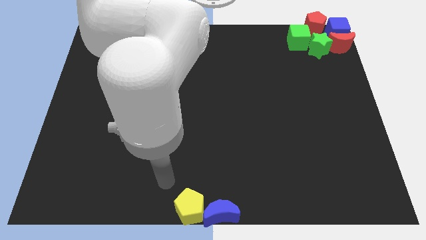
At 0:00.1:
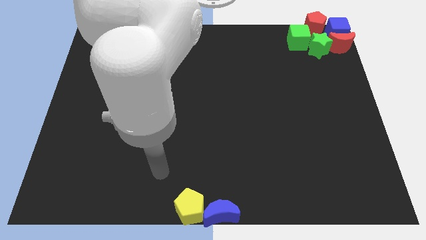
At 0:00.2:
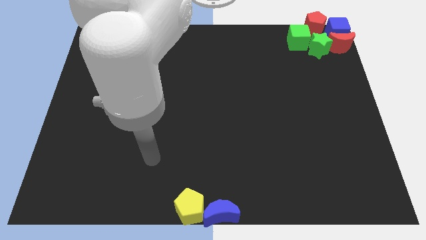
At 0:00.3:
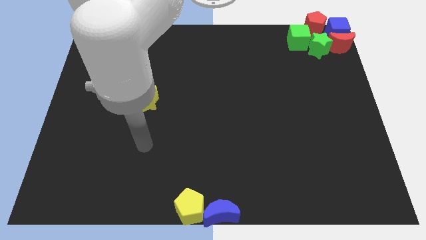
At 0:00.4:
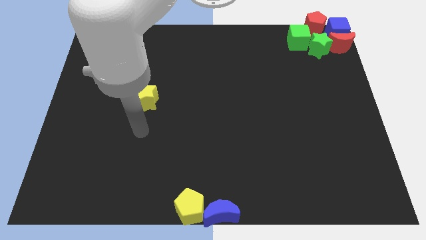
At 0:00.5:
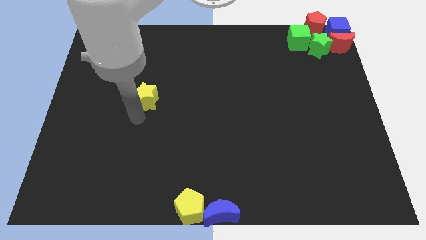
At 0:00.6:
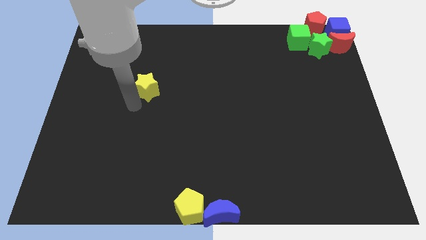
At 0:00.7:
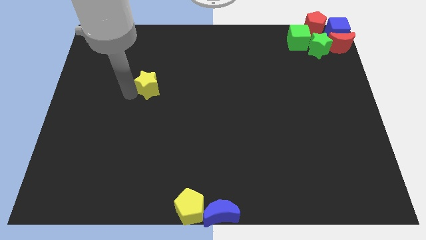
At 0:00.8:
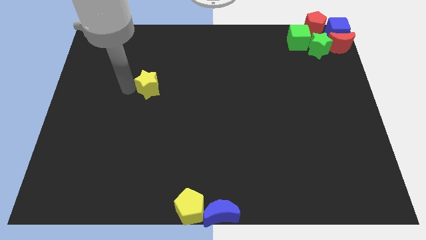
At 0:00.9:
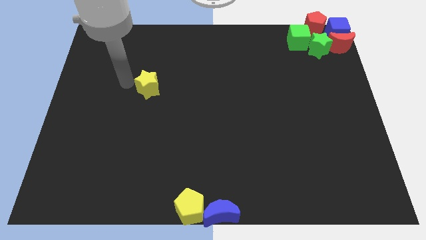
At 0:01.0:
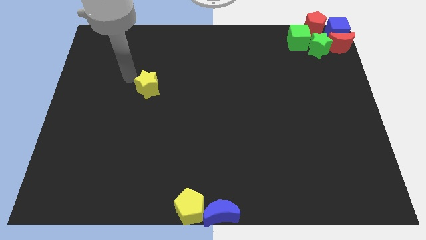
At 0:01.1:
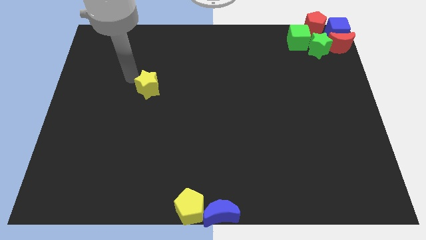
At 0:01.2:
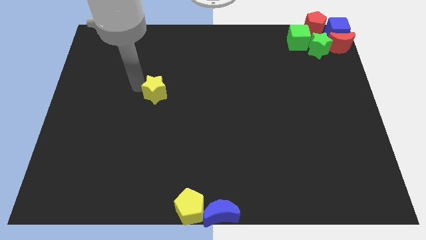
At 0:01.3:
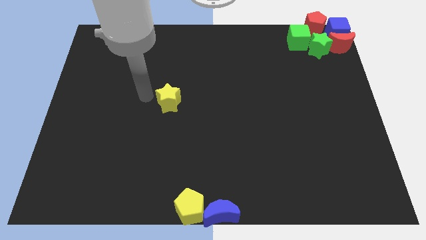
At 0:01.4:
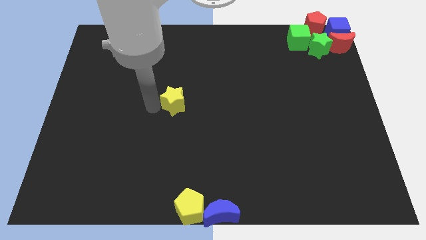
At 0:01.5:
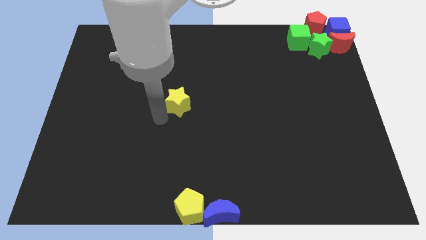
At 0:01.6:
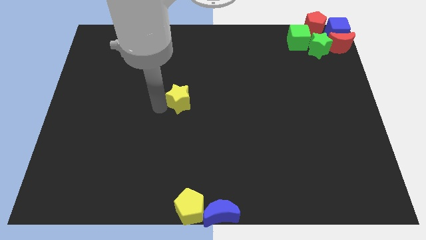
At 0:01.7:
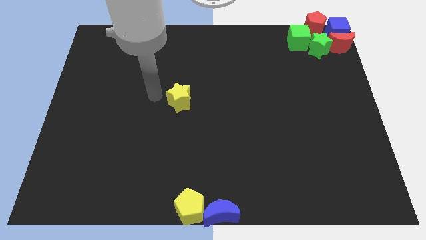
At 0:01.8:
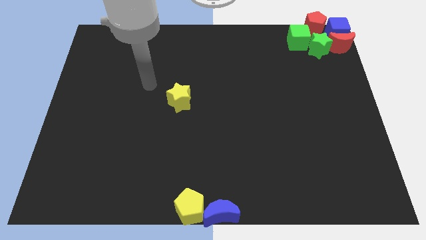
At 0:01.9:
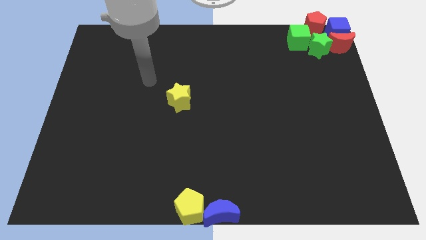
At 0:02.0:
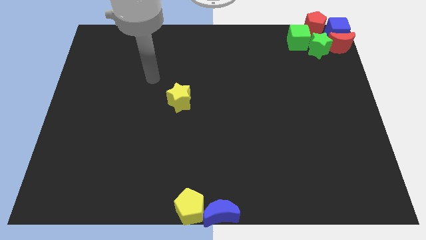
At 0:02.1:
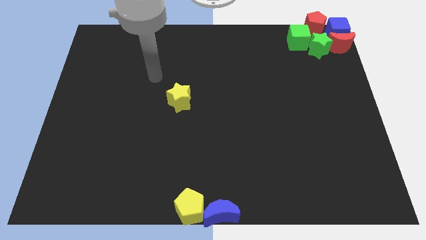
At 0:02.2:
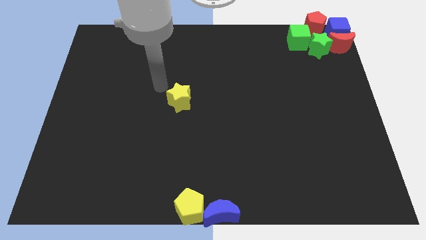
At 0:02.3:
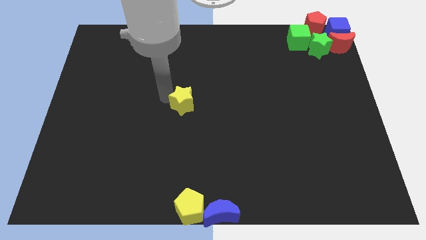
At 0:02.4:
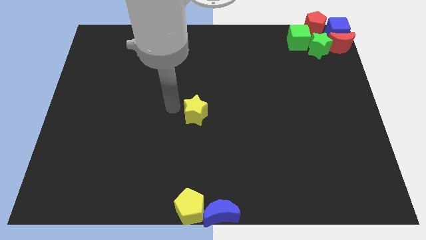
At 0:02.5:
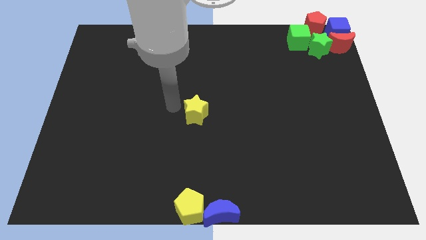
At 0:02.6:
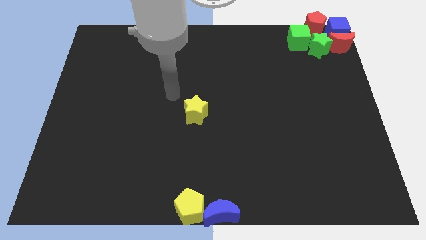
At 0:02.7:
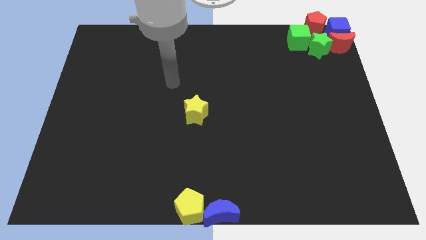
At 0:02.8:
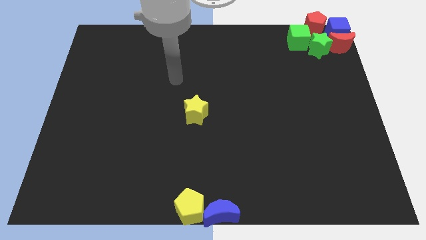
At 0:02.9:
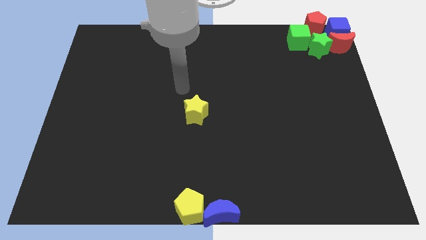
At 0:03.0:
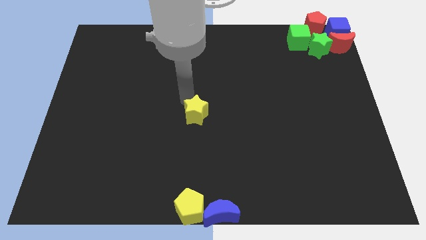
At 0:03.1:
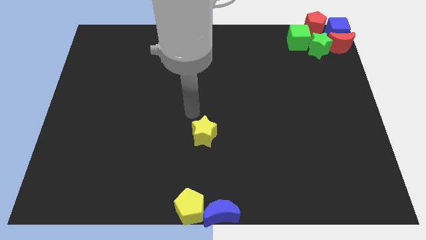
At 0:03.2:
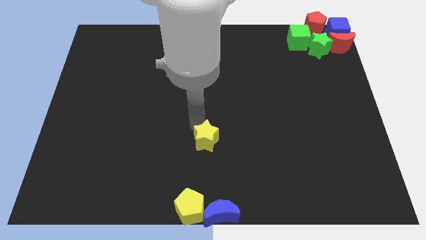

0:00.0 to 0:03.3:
move the yellow star towards the bottom center

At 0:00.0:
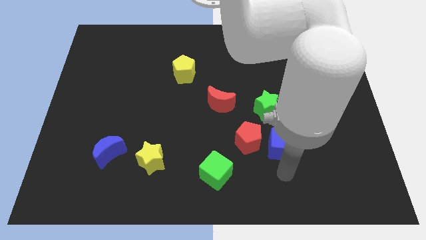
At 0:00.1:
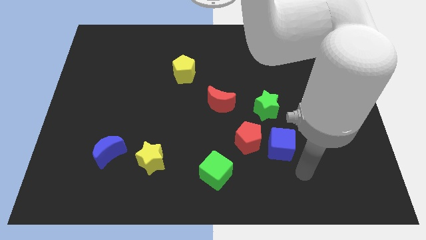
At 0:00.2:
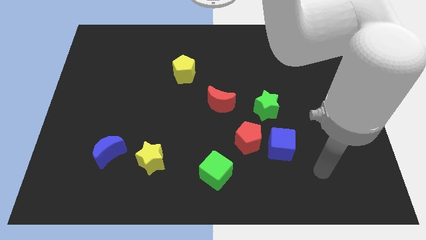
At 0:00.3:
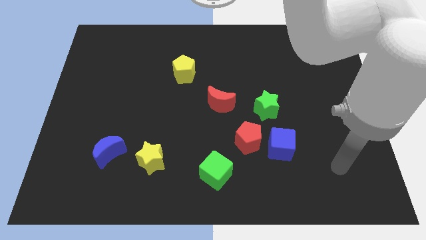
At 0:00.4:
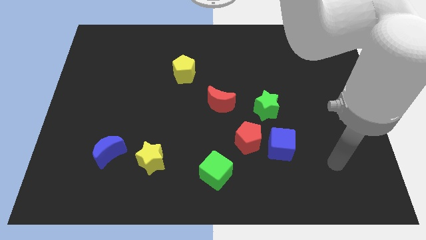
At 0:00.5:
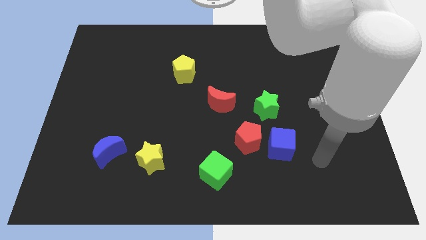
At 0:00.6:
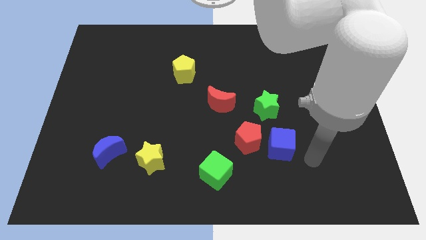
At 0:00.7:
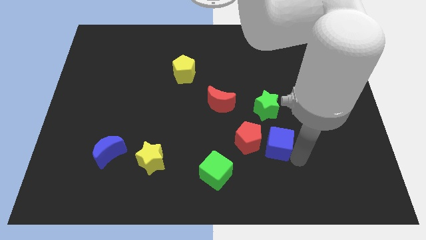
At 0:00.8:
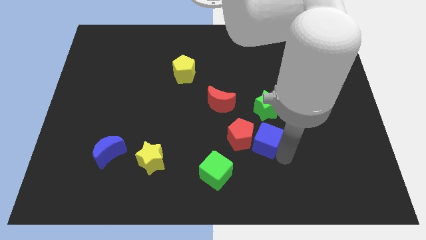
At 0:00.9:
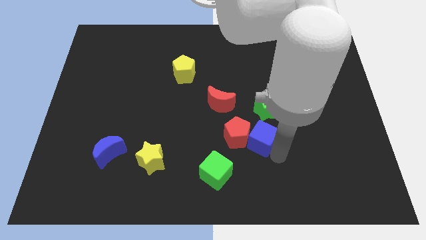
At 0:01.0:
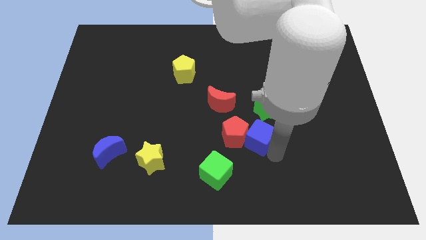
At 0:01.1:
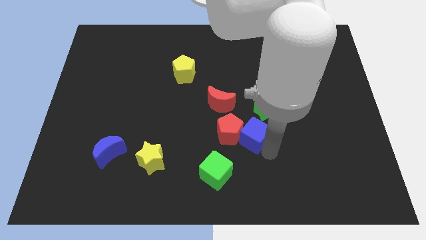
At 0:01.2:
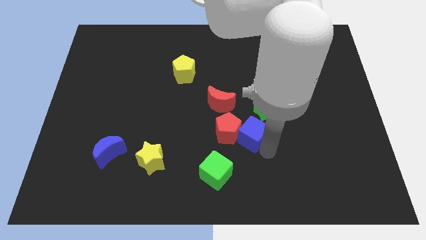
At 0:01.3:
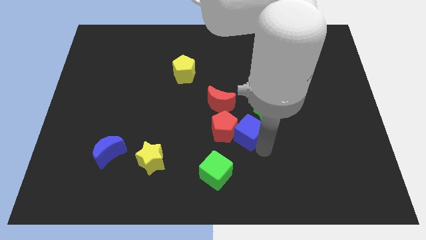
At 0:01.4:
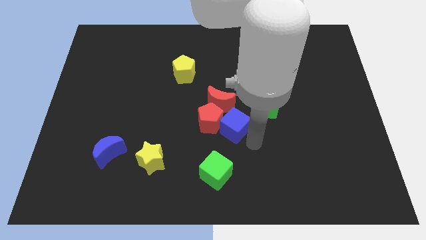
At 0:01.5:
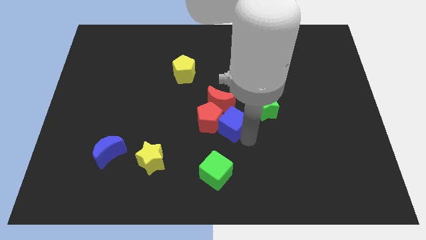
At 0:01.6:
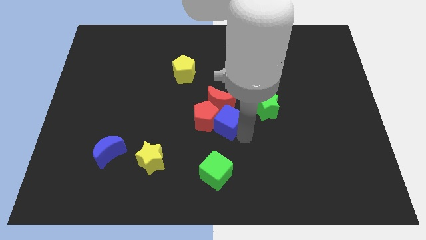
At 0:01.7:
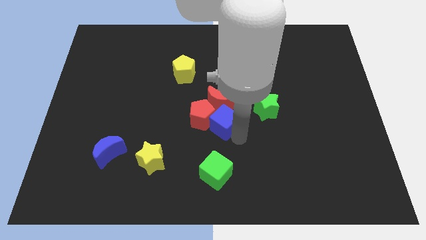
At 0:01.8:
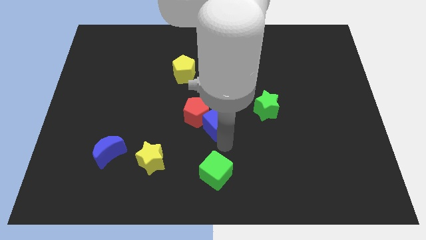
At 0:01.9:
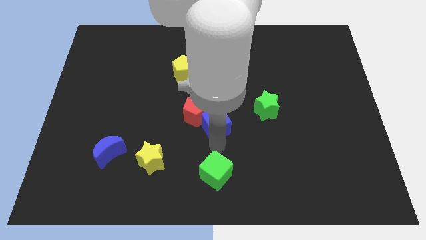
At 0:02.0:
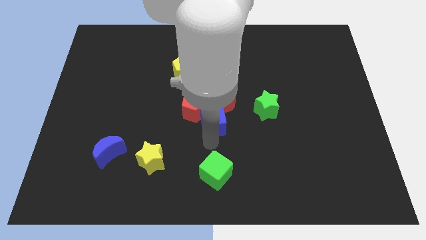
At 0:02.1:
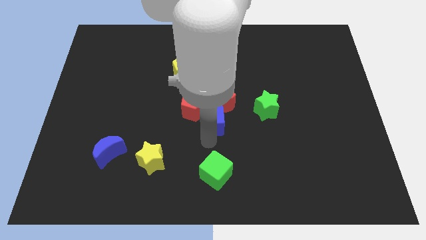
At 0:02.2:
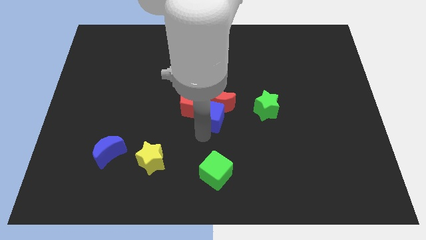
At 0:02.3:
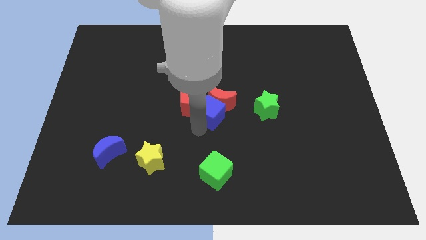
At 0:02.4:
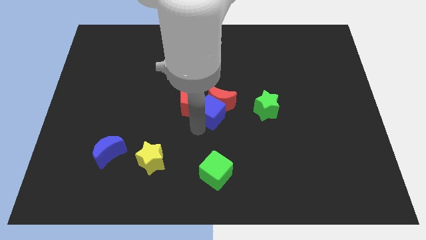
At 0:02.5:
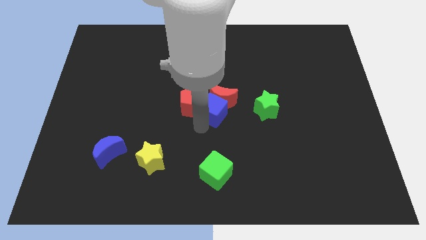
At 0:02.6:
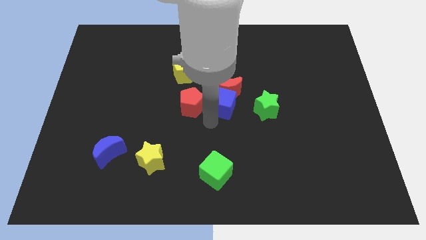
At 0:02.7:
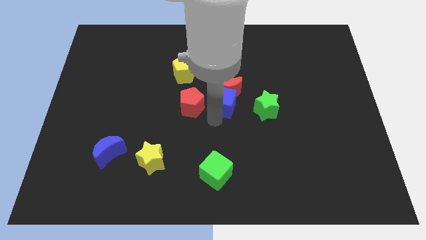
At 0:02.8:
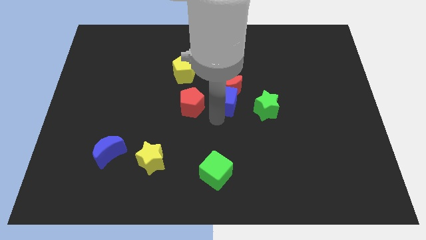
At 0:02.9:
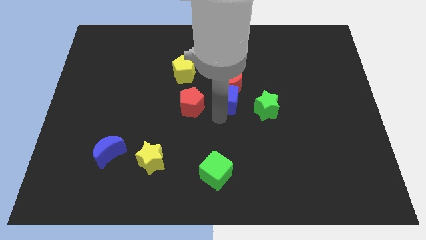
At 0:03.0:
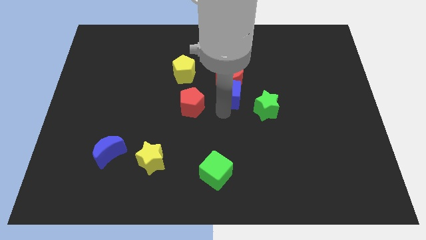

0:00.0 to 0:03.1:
push the blue cube into the red moon

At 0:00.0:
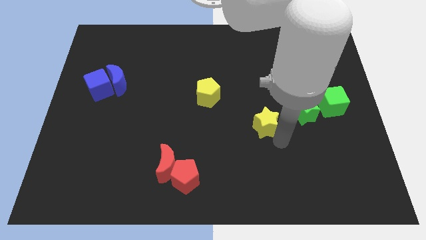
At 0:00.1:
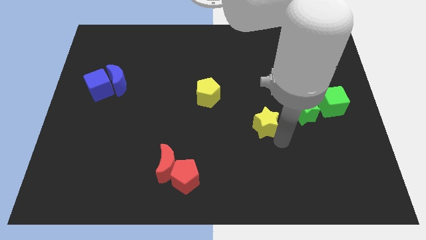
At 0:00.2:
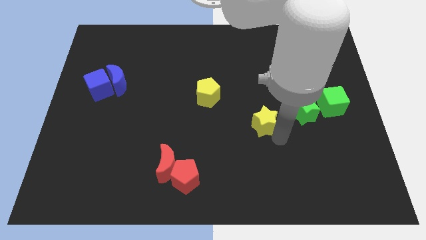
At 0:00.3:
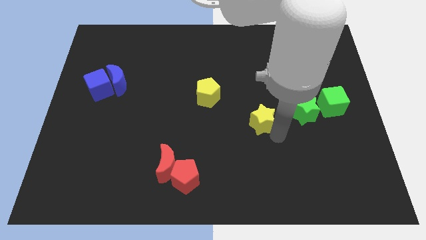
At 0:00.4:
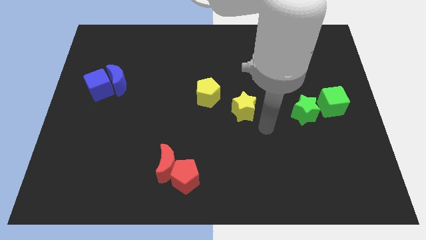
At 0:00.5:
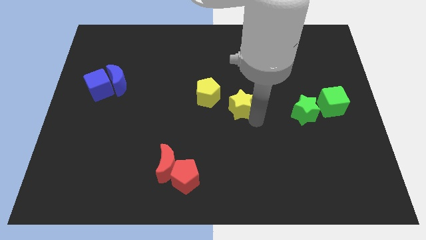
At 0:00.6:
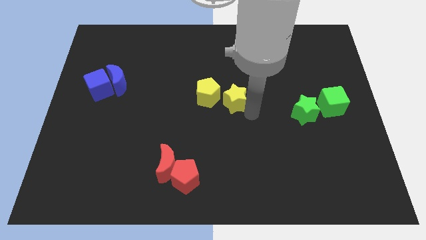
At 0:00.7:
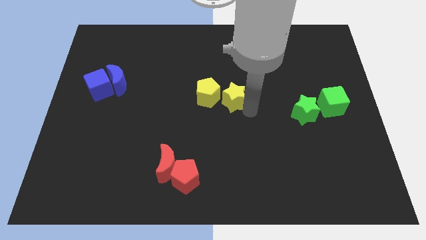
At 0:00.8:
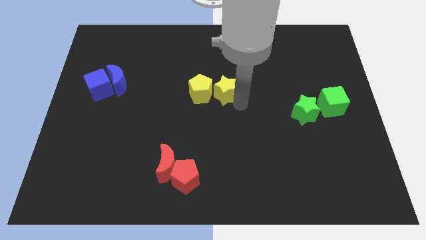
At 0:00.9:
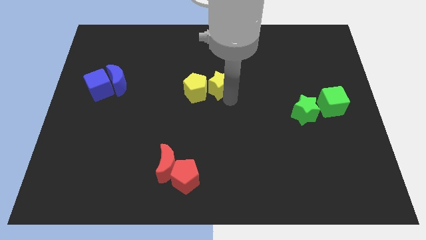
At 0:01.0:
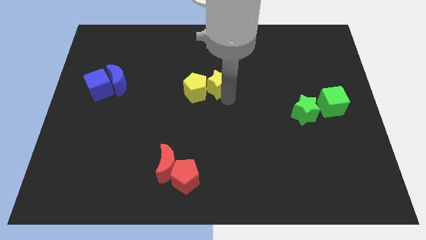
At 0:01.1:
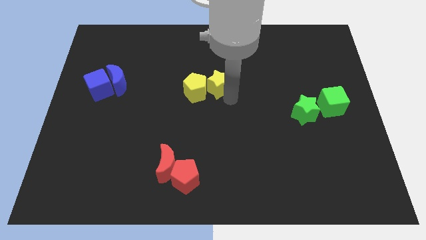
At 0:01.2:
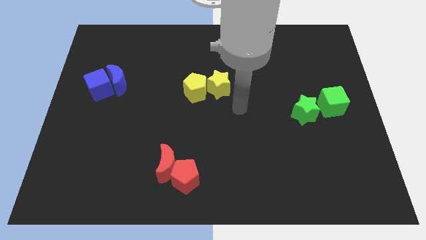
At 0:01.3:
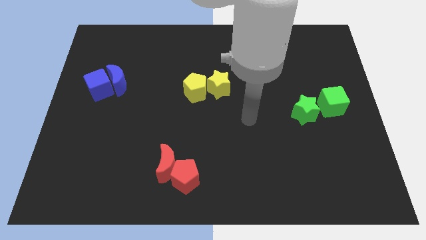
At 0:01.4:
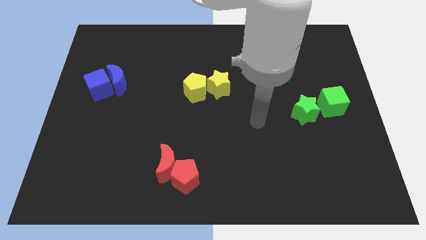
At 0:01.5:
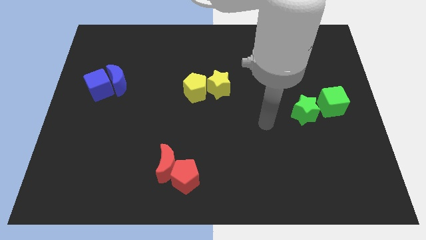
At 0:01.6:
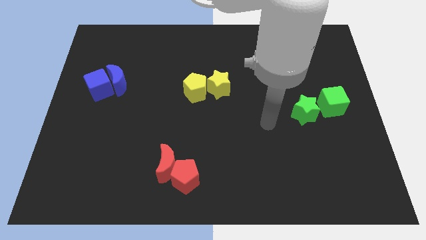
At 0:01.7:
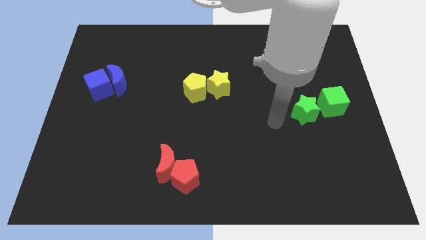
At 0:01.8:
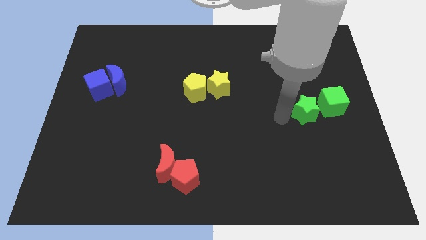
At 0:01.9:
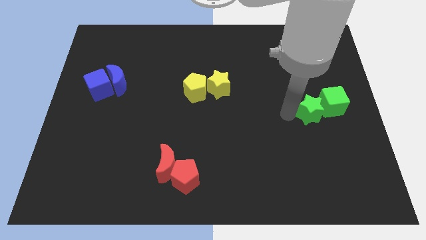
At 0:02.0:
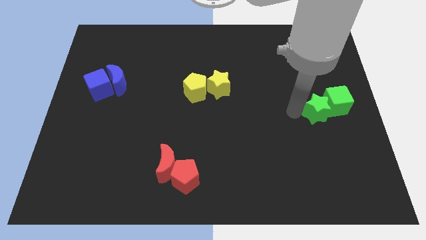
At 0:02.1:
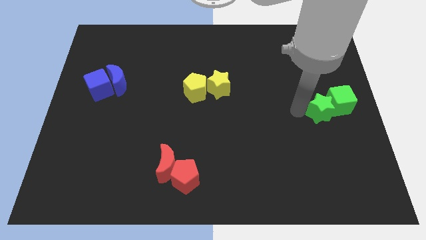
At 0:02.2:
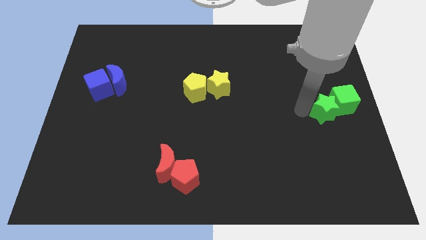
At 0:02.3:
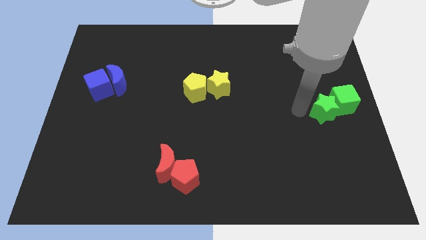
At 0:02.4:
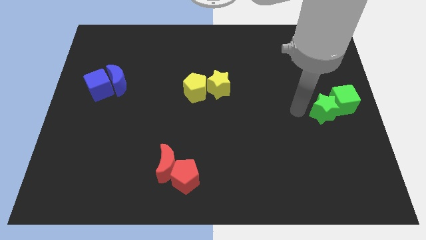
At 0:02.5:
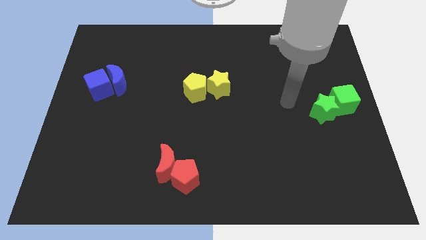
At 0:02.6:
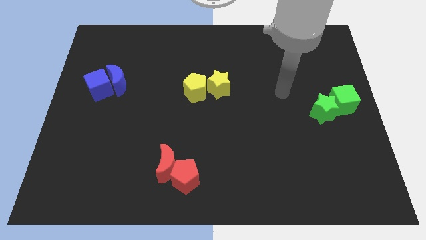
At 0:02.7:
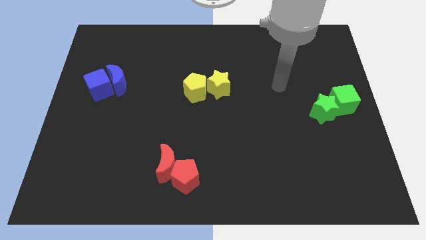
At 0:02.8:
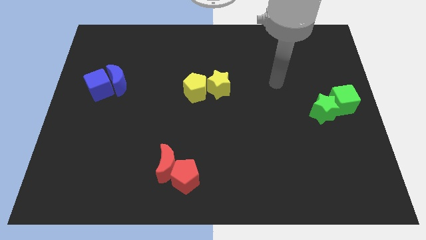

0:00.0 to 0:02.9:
push the yellow star into the yellow pentagon
